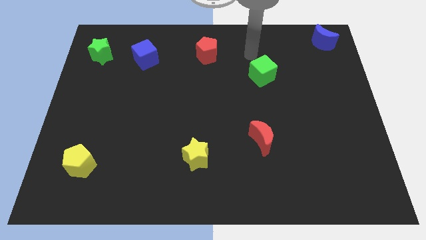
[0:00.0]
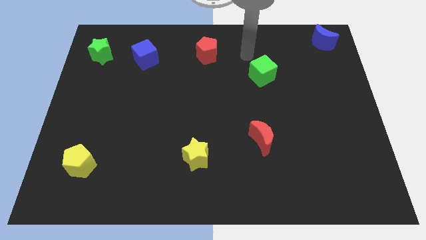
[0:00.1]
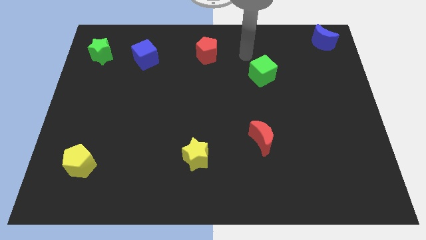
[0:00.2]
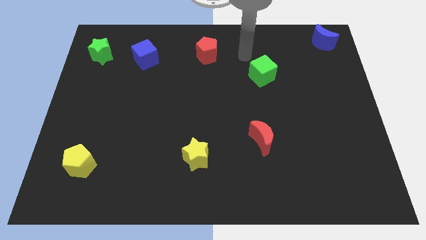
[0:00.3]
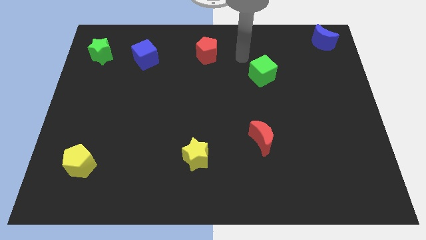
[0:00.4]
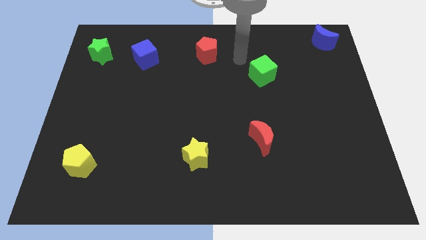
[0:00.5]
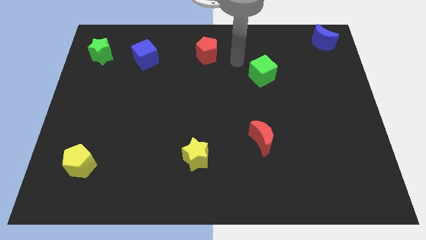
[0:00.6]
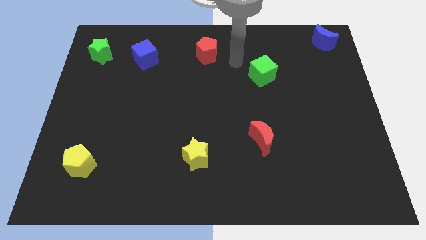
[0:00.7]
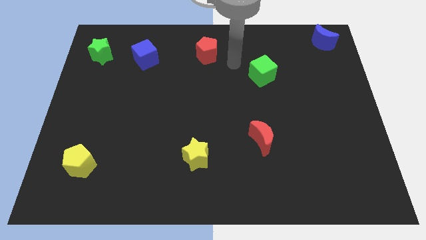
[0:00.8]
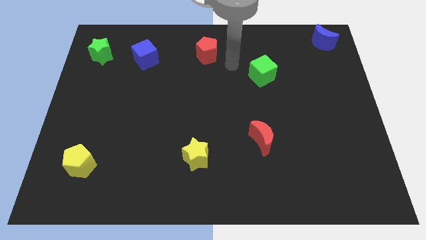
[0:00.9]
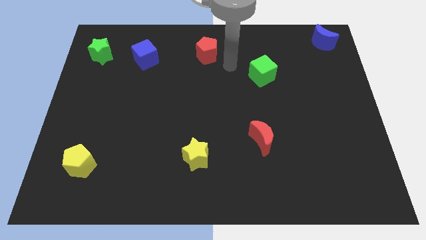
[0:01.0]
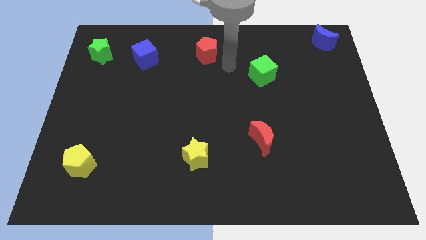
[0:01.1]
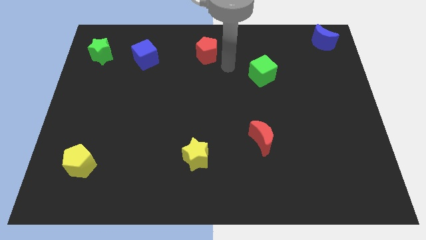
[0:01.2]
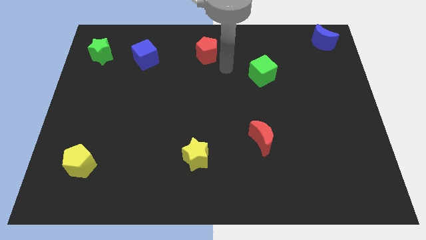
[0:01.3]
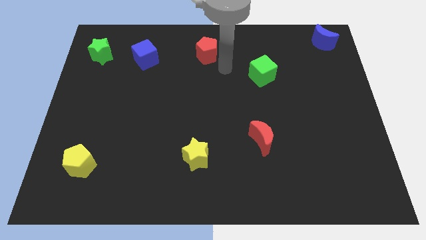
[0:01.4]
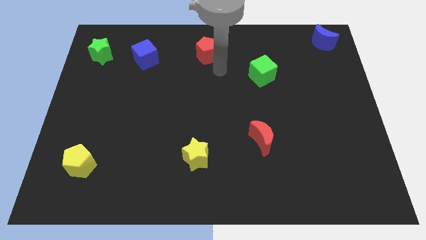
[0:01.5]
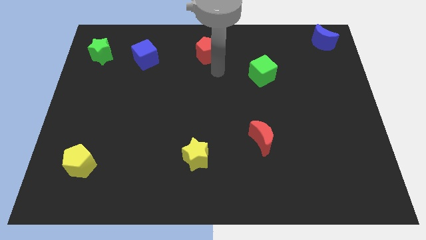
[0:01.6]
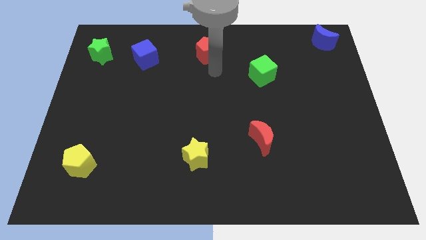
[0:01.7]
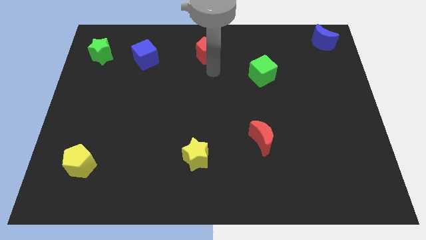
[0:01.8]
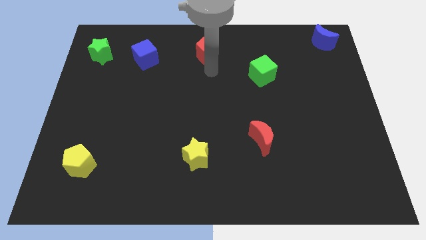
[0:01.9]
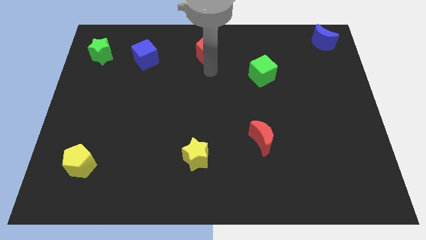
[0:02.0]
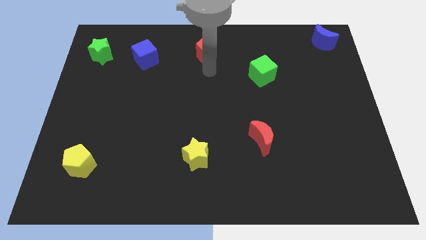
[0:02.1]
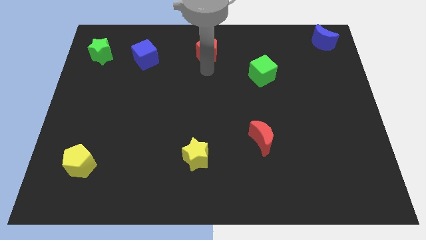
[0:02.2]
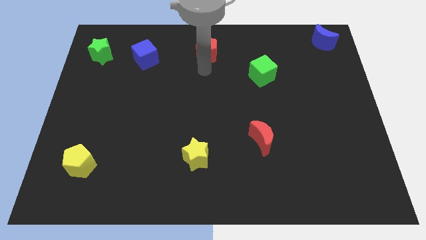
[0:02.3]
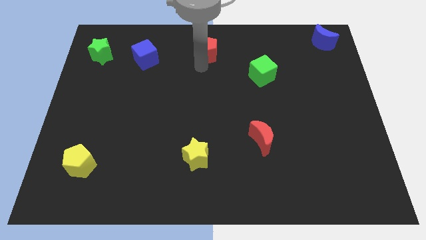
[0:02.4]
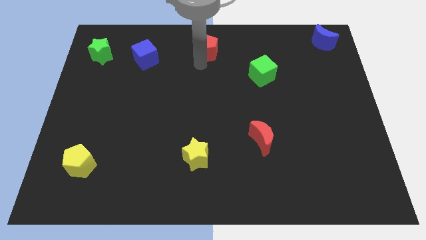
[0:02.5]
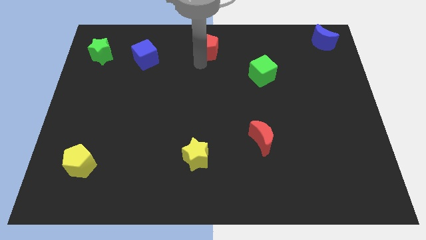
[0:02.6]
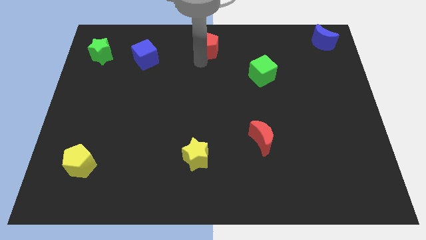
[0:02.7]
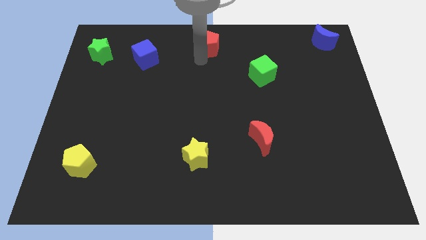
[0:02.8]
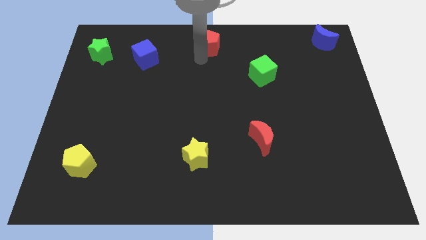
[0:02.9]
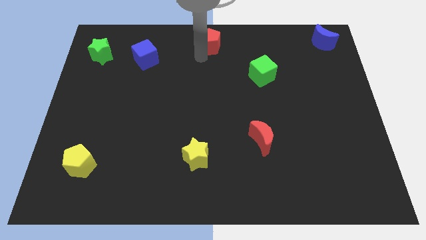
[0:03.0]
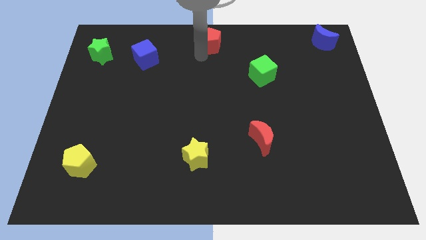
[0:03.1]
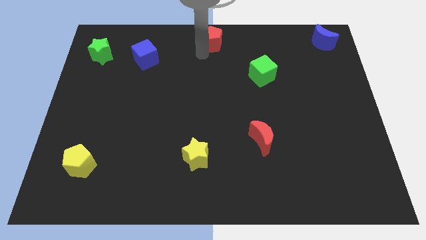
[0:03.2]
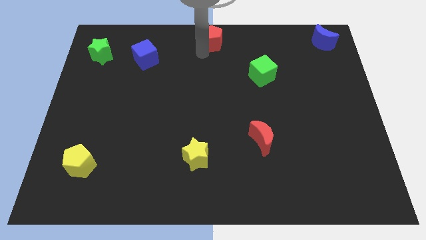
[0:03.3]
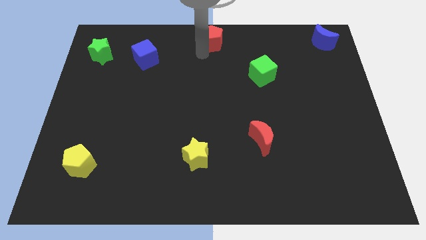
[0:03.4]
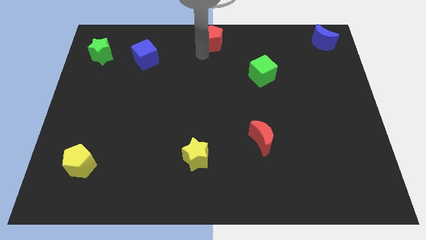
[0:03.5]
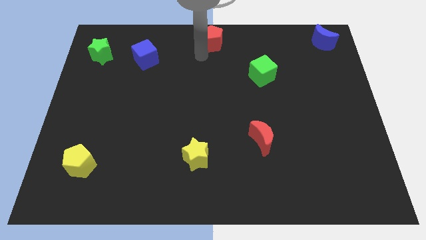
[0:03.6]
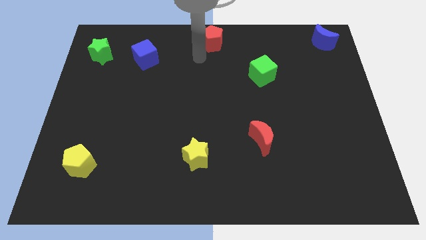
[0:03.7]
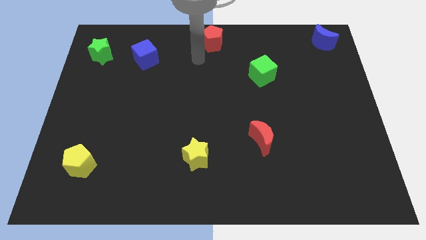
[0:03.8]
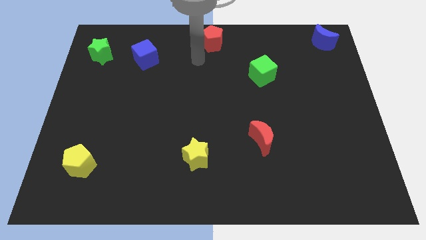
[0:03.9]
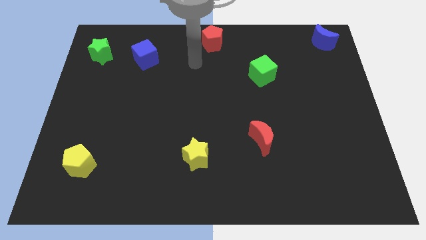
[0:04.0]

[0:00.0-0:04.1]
move the red pentagon to the top middle

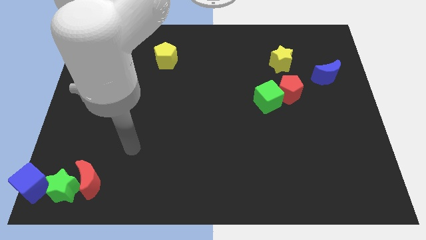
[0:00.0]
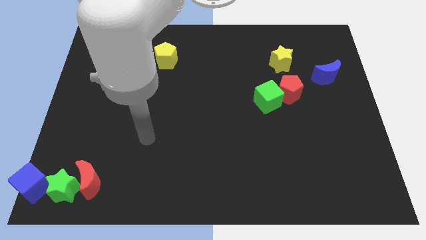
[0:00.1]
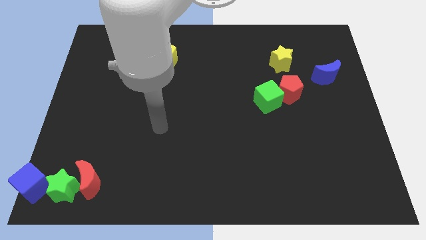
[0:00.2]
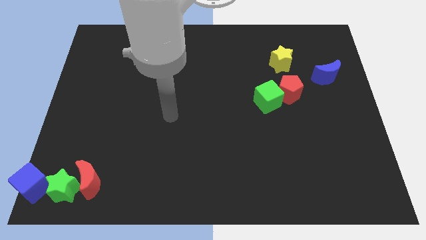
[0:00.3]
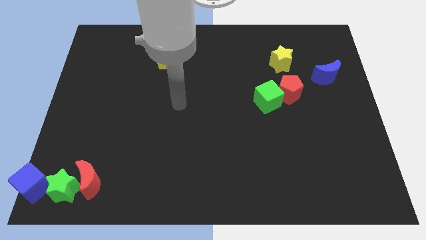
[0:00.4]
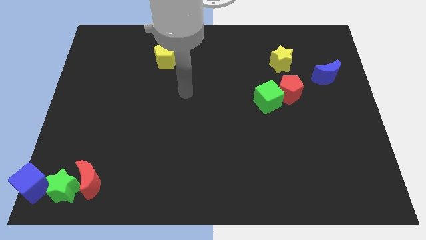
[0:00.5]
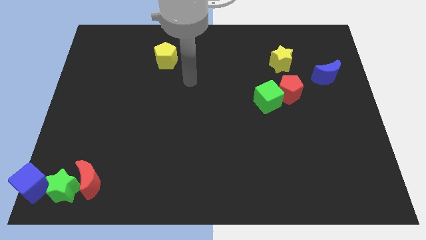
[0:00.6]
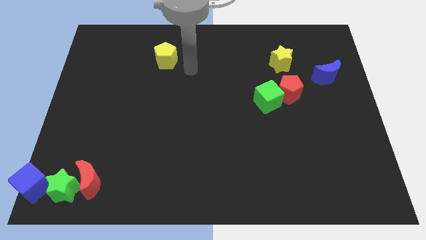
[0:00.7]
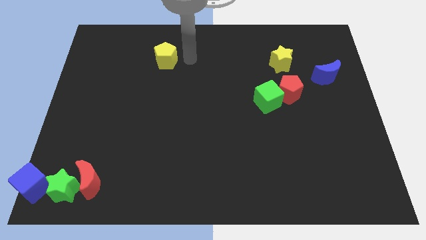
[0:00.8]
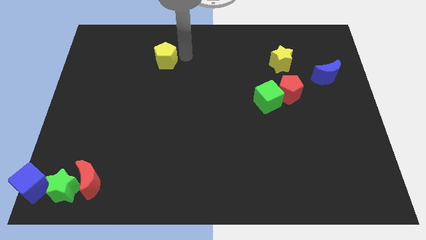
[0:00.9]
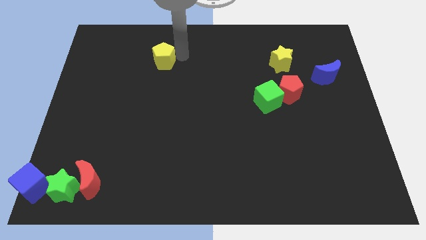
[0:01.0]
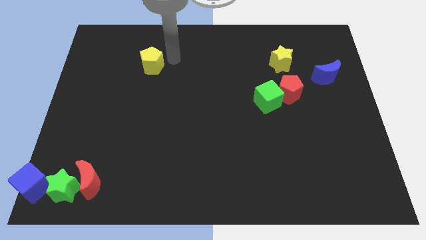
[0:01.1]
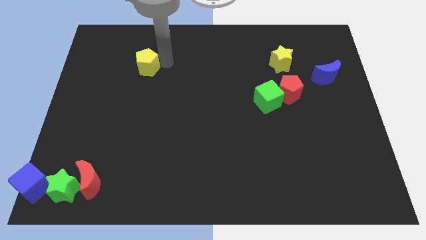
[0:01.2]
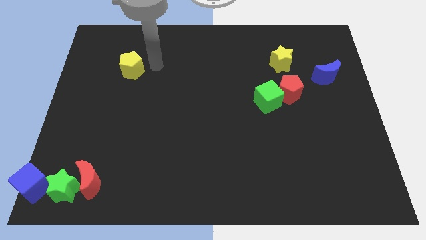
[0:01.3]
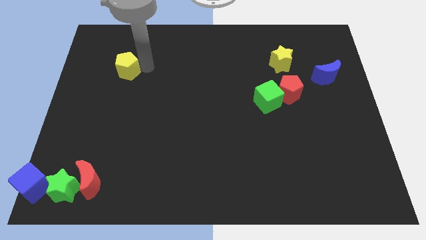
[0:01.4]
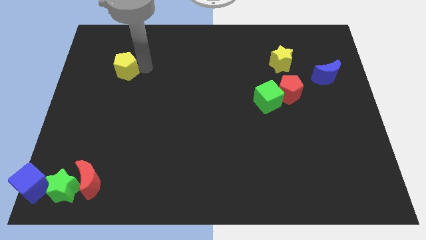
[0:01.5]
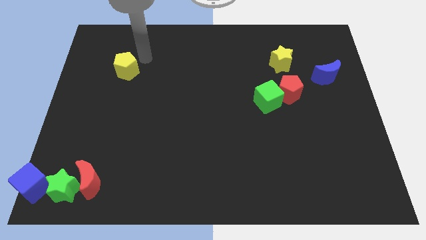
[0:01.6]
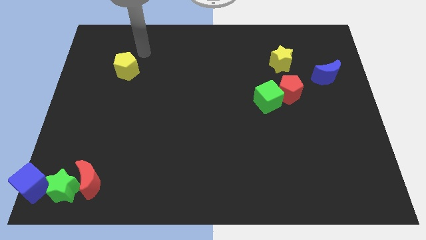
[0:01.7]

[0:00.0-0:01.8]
push the yellow pentagon towards the left

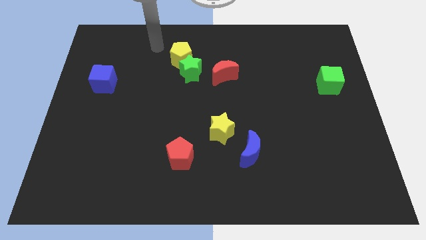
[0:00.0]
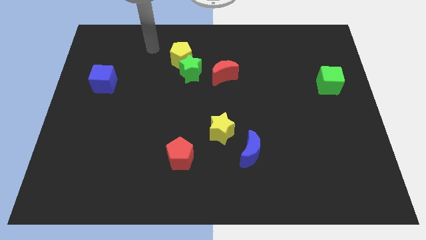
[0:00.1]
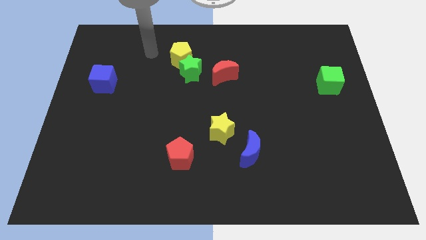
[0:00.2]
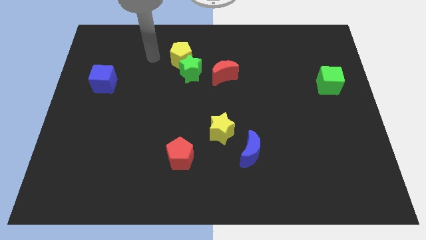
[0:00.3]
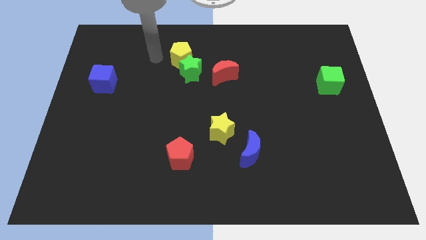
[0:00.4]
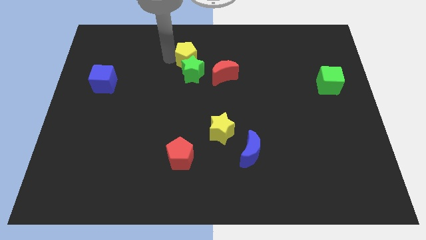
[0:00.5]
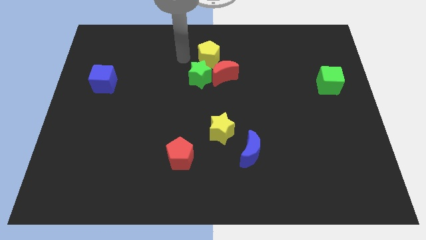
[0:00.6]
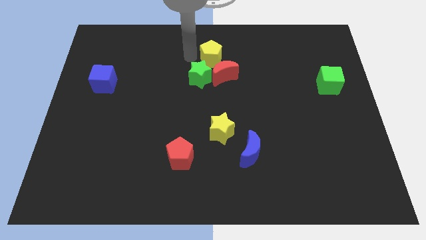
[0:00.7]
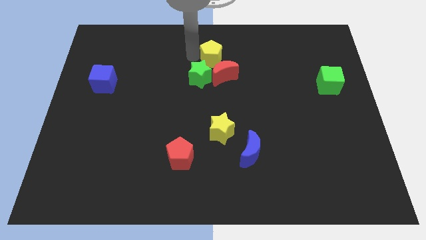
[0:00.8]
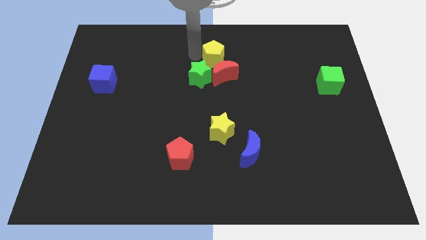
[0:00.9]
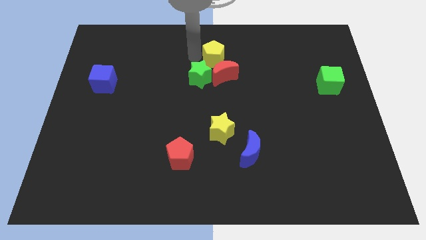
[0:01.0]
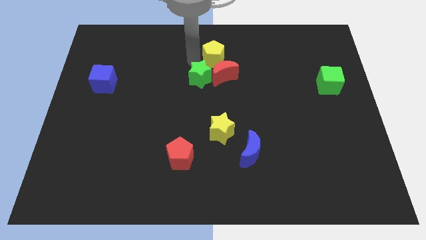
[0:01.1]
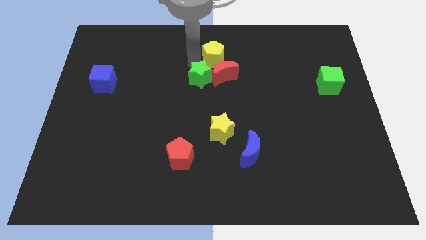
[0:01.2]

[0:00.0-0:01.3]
place yellow pentagon to the top of red moon

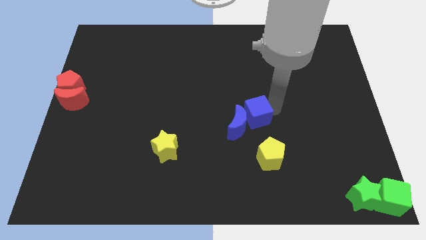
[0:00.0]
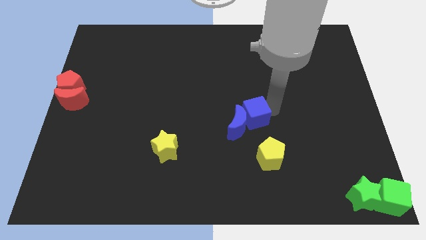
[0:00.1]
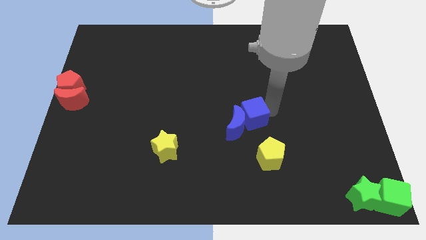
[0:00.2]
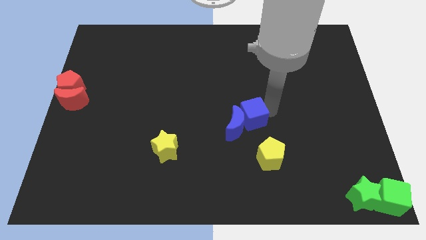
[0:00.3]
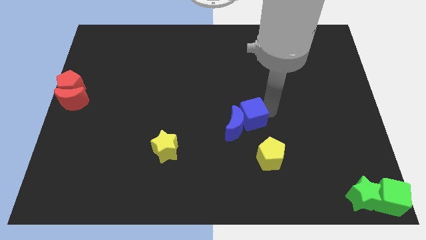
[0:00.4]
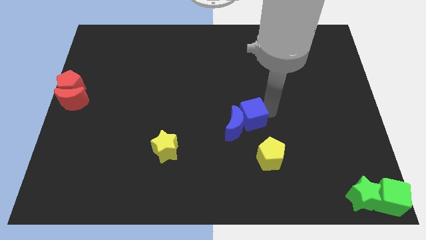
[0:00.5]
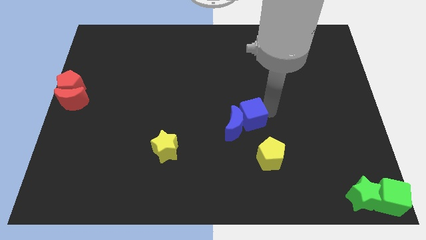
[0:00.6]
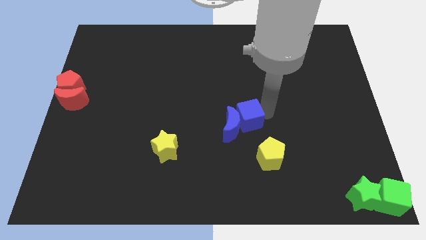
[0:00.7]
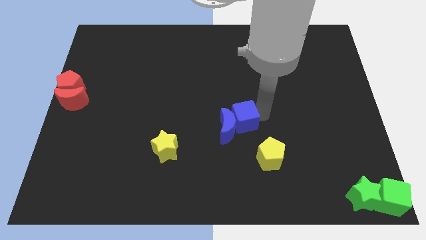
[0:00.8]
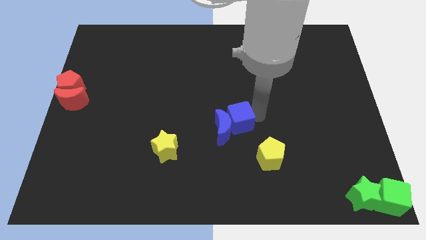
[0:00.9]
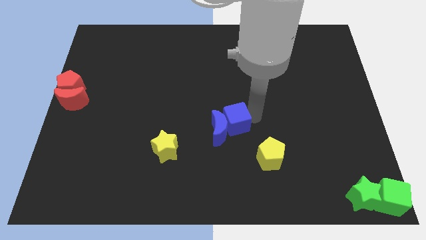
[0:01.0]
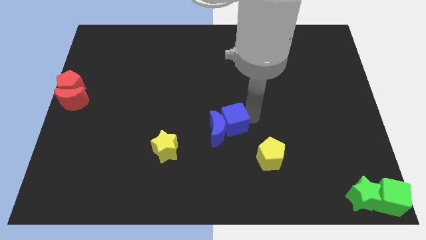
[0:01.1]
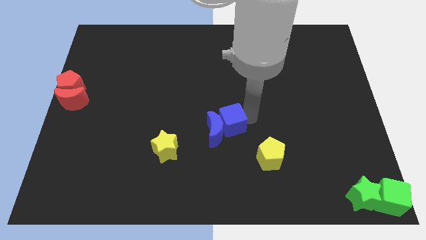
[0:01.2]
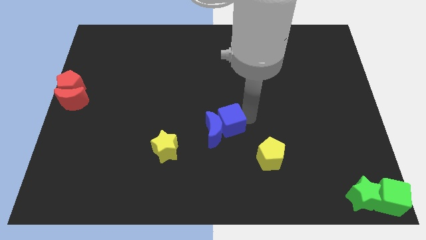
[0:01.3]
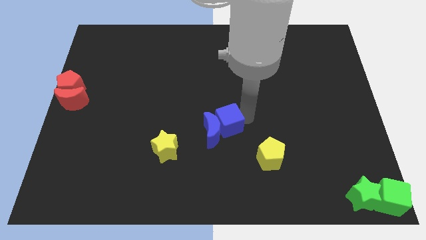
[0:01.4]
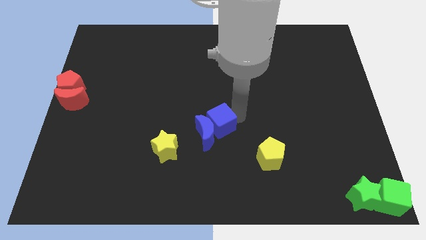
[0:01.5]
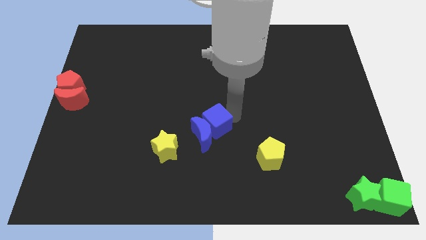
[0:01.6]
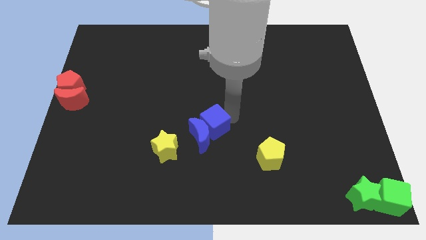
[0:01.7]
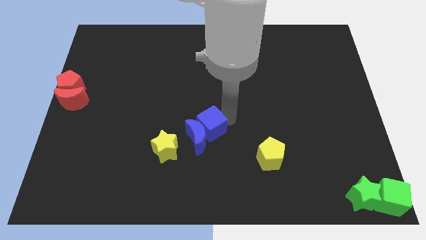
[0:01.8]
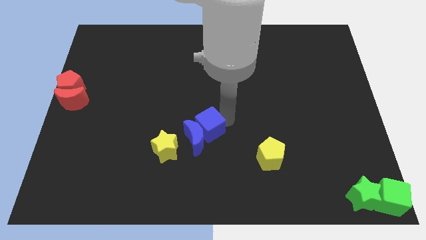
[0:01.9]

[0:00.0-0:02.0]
push the blue cube into the blue crescent
